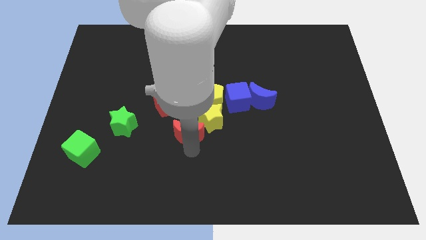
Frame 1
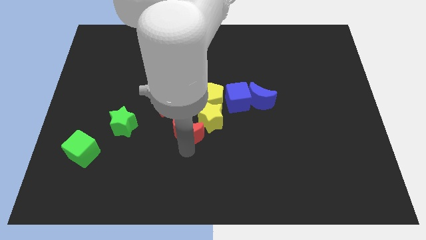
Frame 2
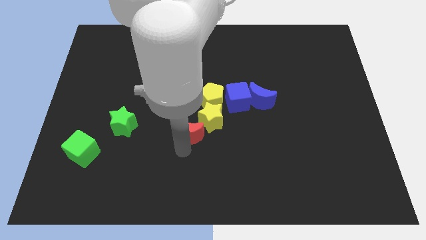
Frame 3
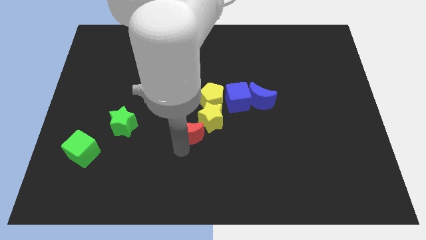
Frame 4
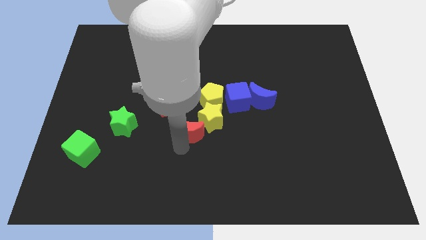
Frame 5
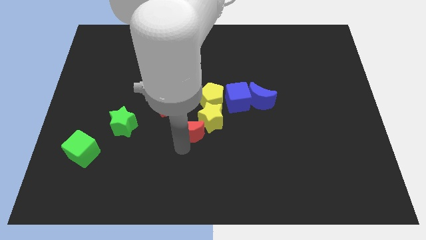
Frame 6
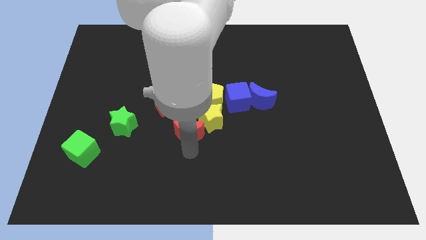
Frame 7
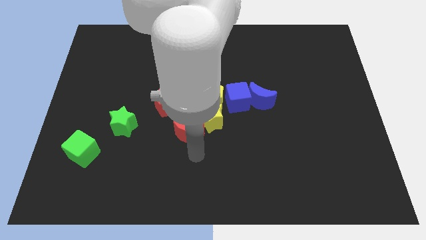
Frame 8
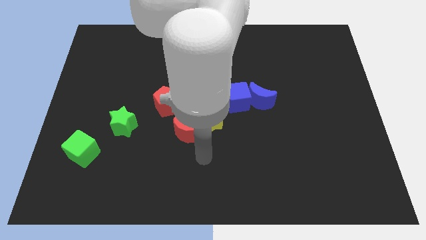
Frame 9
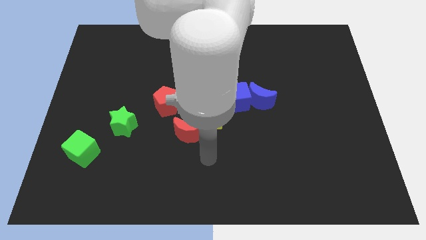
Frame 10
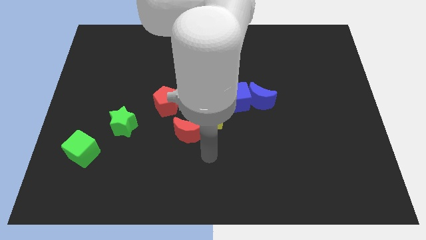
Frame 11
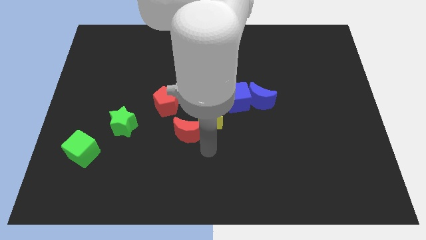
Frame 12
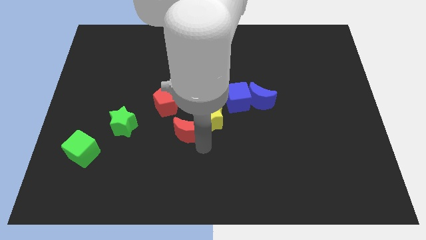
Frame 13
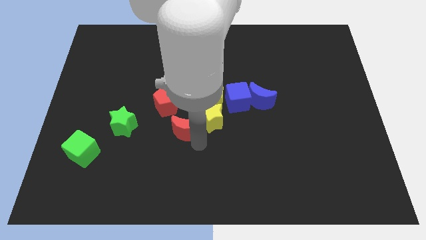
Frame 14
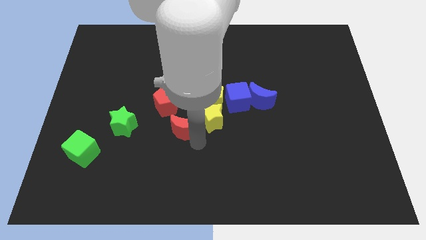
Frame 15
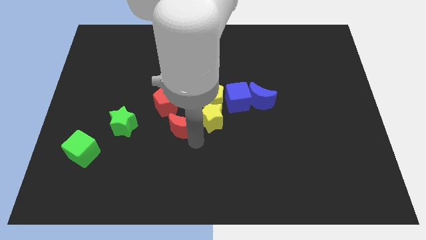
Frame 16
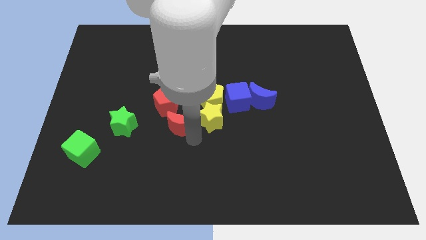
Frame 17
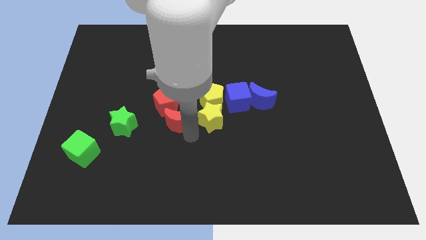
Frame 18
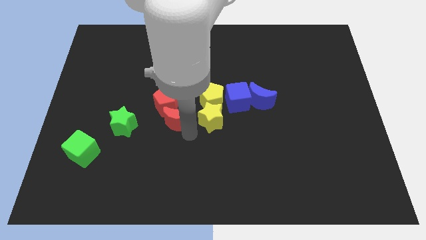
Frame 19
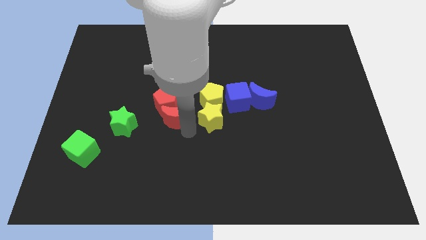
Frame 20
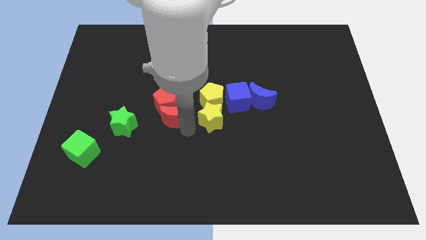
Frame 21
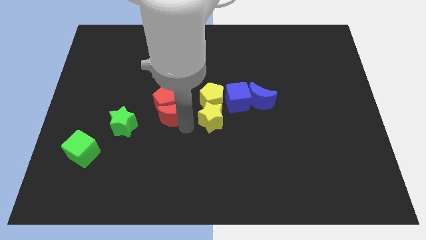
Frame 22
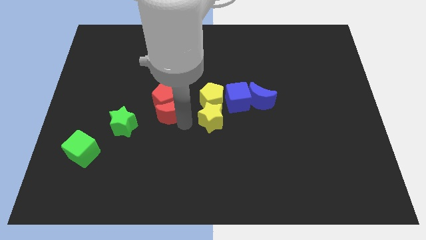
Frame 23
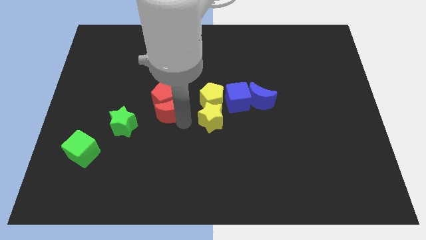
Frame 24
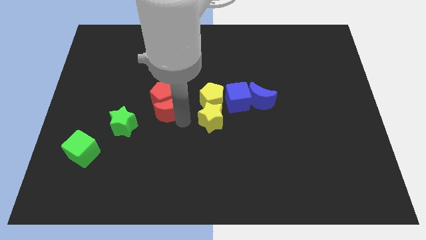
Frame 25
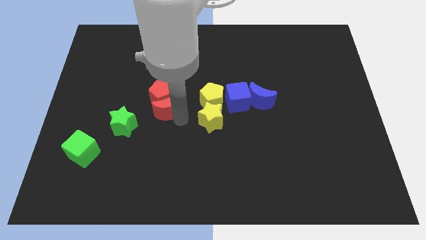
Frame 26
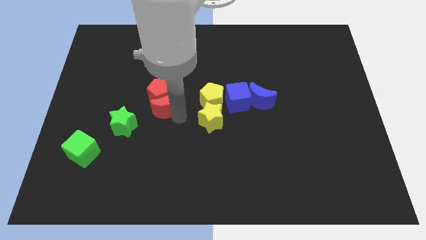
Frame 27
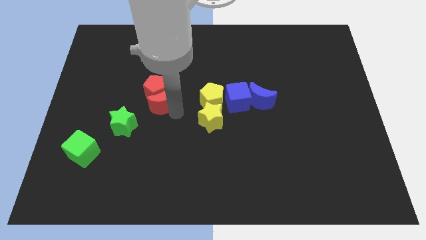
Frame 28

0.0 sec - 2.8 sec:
move the red moon into the red pentagon

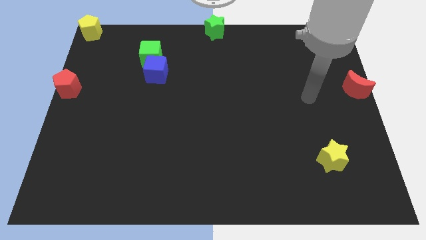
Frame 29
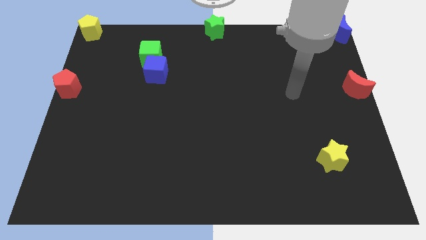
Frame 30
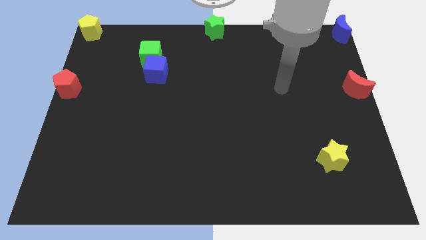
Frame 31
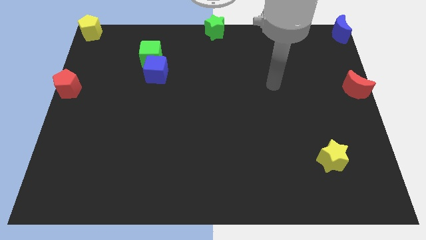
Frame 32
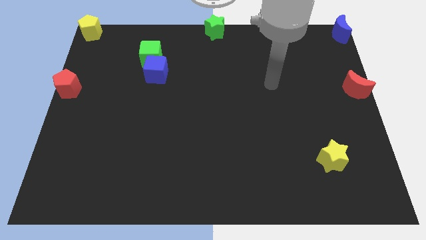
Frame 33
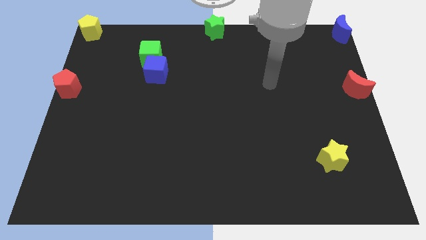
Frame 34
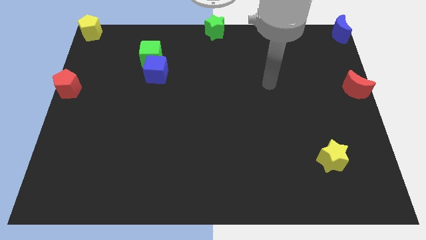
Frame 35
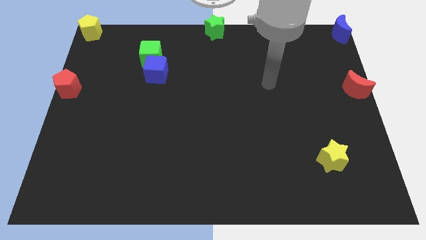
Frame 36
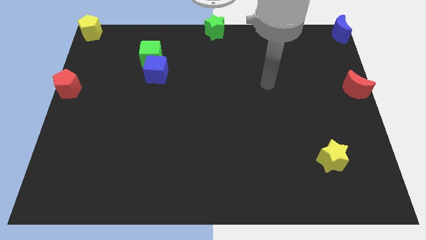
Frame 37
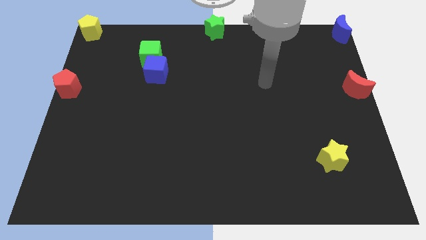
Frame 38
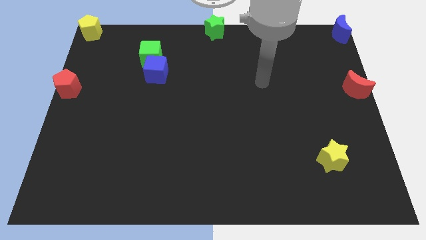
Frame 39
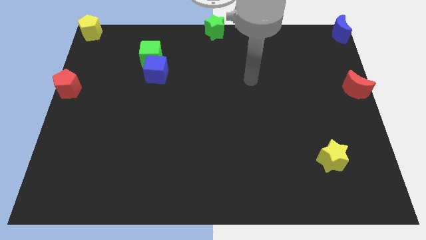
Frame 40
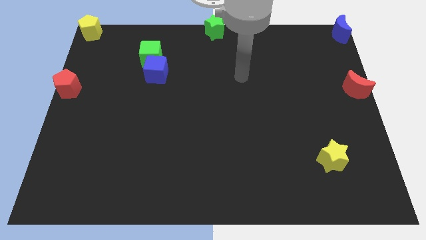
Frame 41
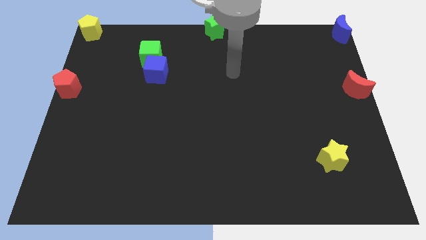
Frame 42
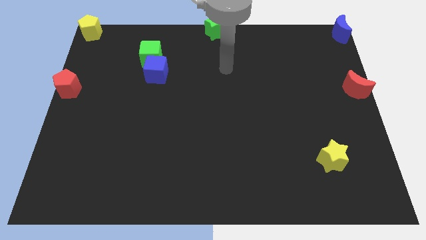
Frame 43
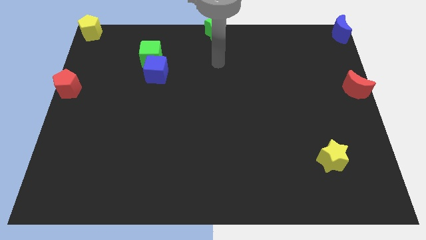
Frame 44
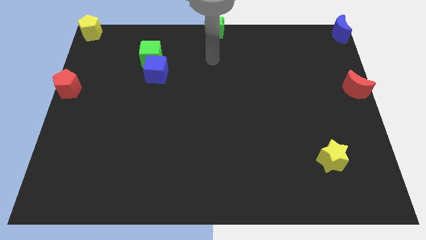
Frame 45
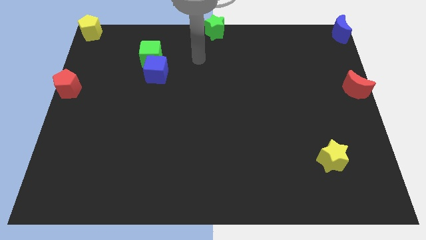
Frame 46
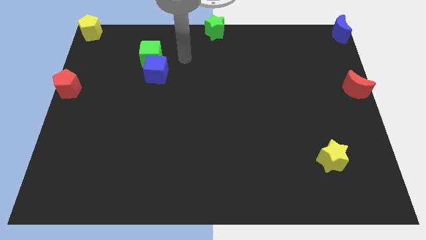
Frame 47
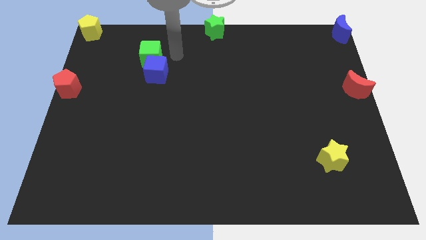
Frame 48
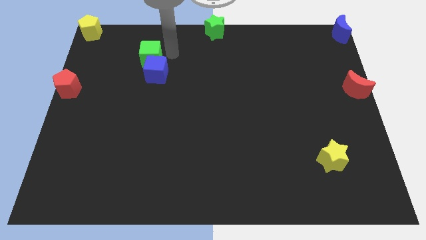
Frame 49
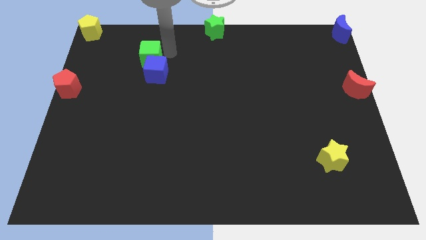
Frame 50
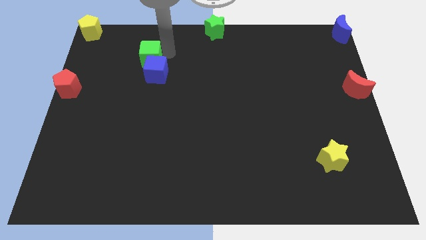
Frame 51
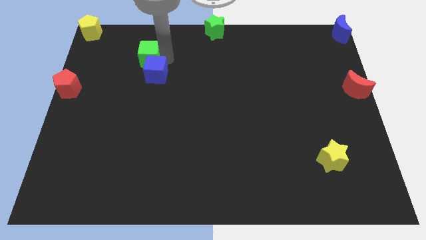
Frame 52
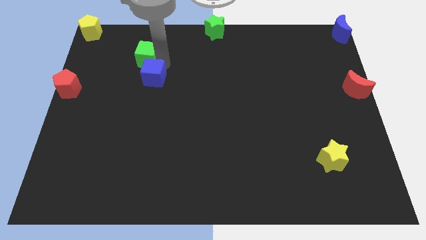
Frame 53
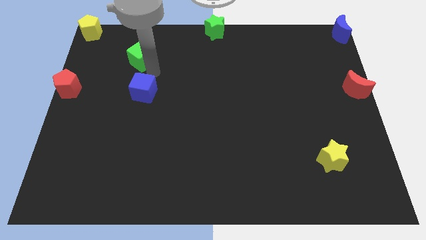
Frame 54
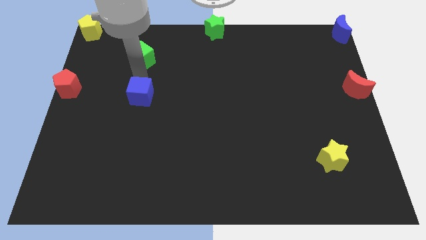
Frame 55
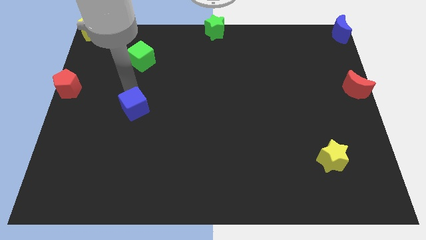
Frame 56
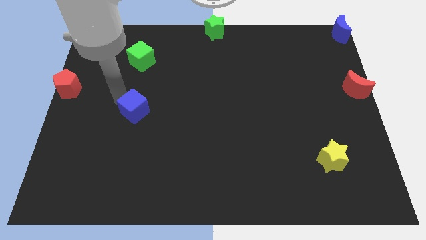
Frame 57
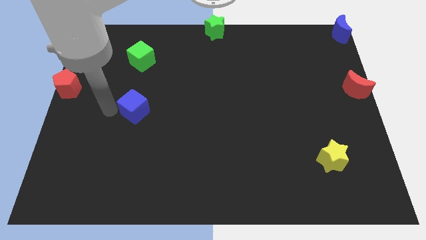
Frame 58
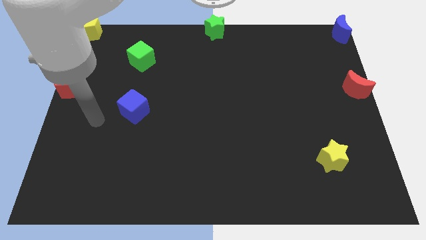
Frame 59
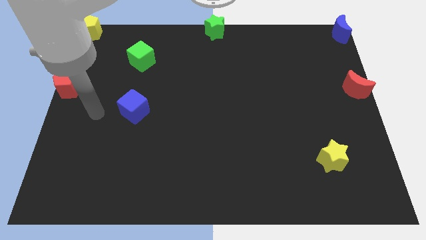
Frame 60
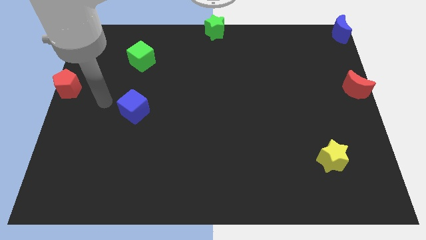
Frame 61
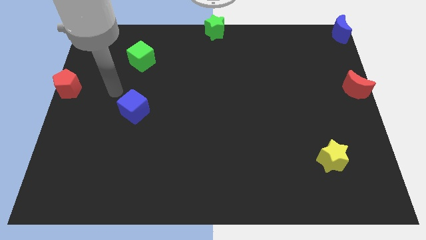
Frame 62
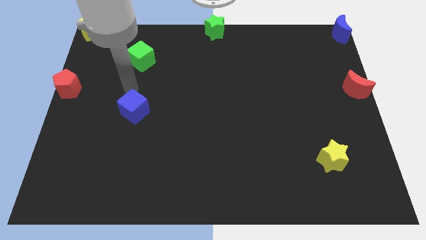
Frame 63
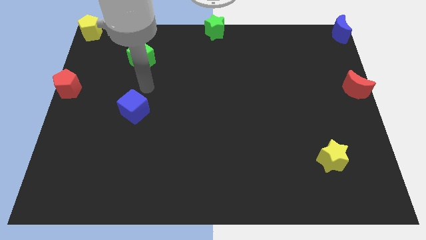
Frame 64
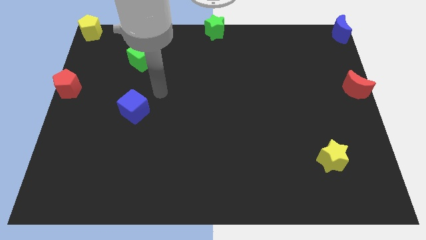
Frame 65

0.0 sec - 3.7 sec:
split the blue cube and green cube away

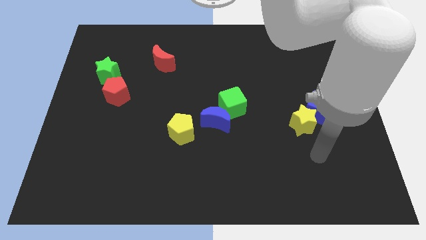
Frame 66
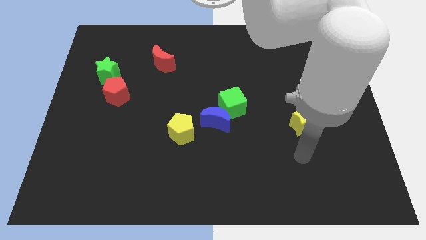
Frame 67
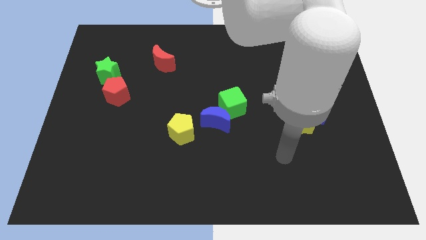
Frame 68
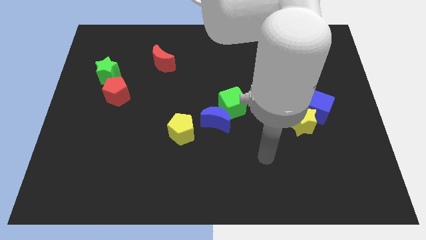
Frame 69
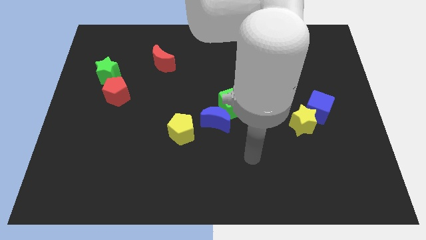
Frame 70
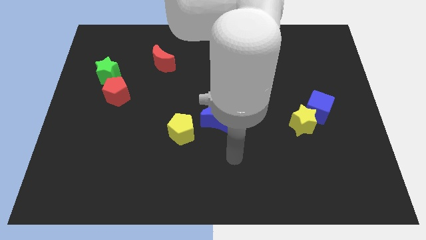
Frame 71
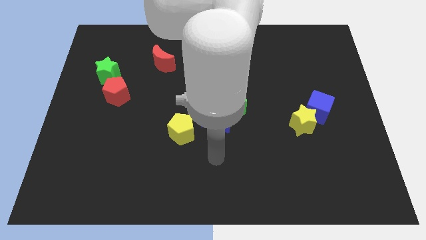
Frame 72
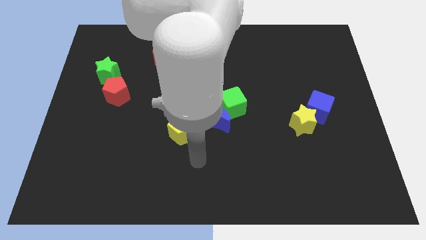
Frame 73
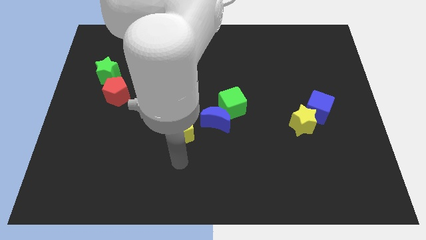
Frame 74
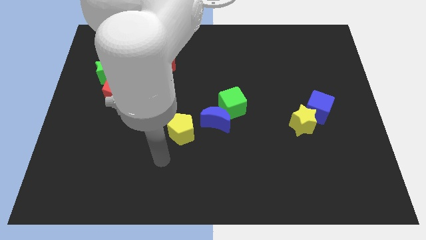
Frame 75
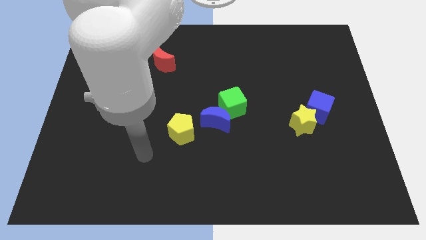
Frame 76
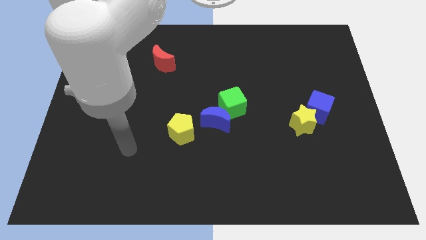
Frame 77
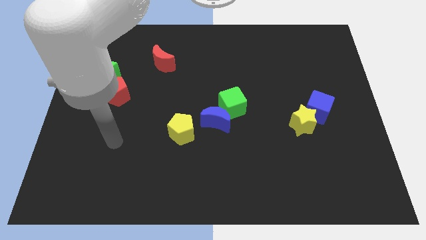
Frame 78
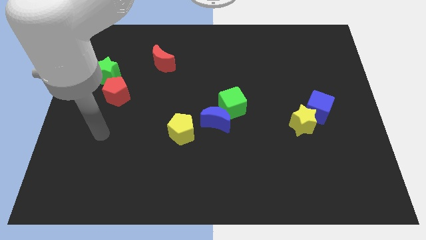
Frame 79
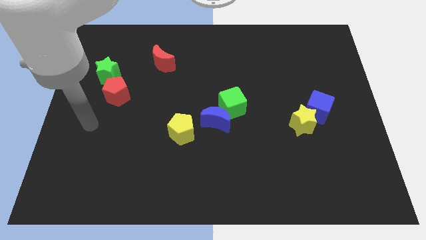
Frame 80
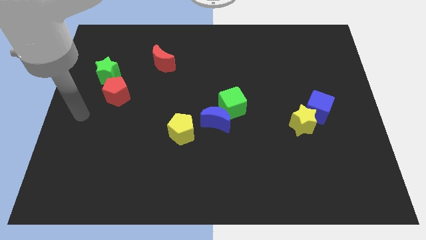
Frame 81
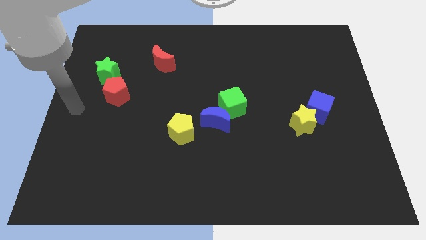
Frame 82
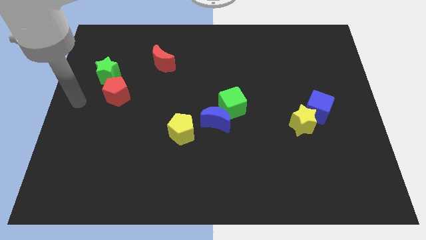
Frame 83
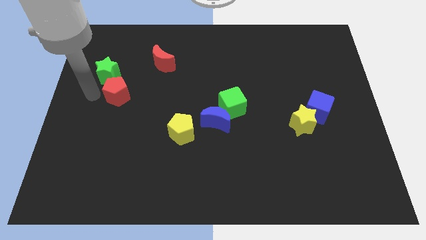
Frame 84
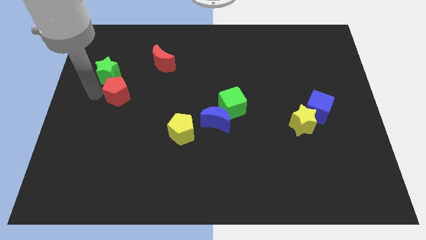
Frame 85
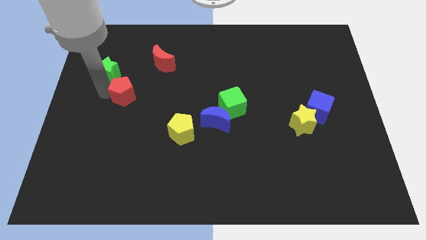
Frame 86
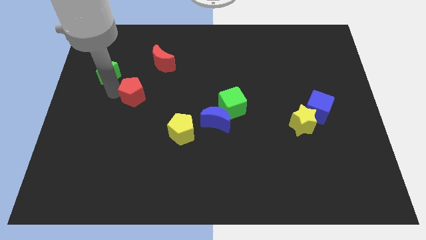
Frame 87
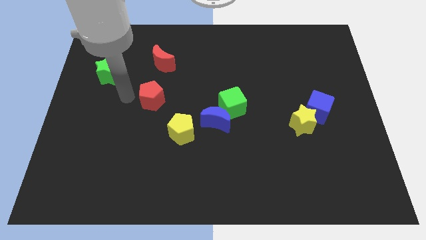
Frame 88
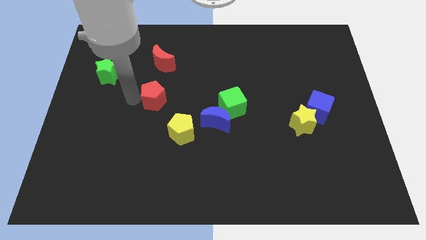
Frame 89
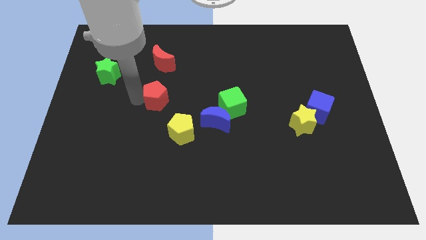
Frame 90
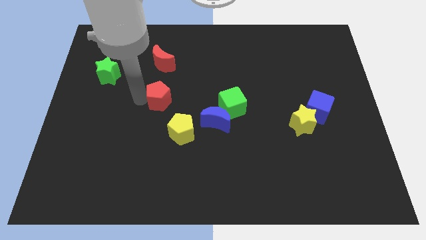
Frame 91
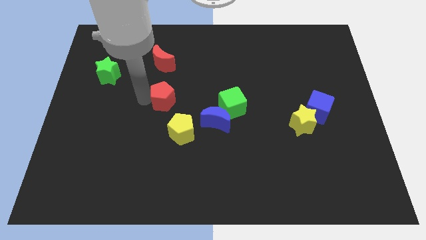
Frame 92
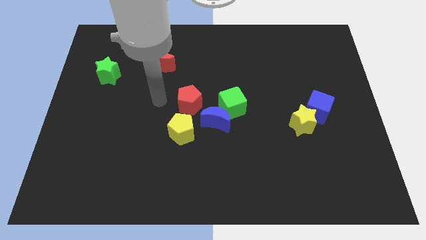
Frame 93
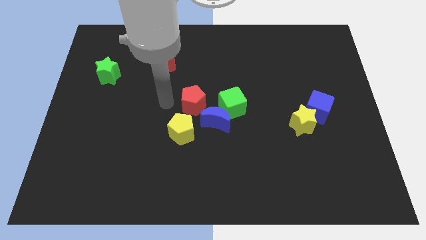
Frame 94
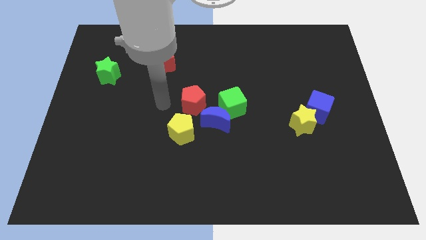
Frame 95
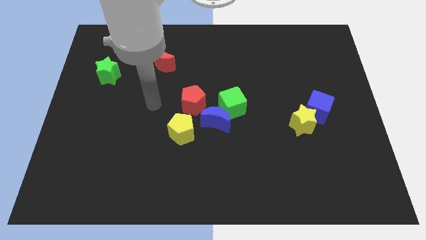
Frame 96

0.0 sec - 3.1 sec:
place the red pentagon at the left side of the green cube
